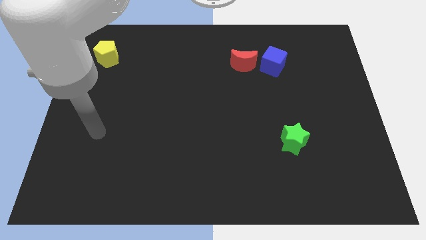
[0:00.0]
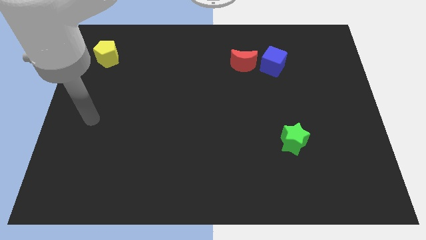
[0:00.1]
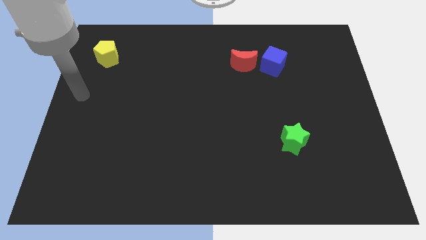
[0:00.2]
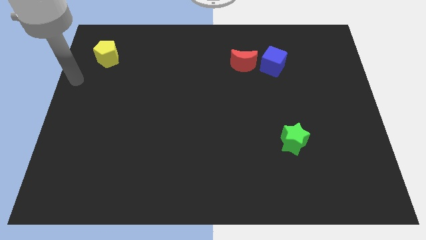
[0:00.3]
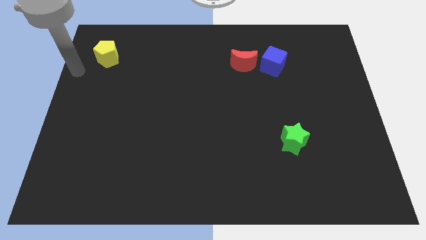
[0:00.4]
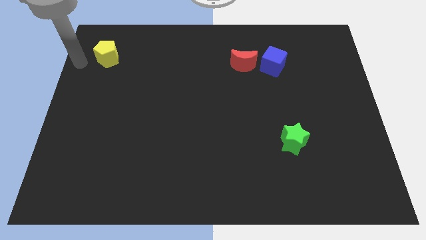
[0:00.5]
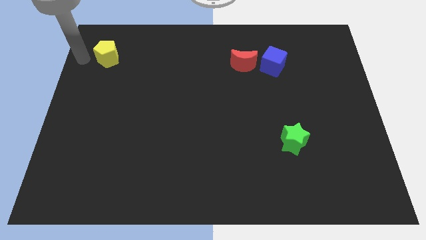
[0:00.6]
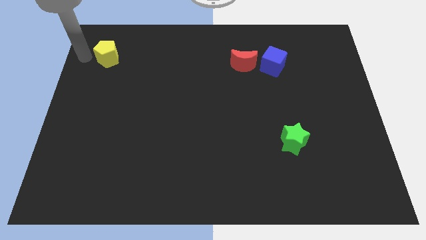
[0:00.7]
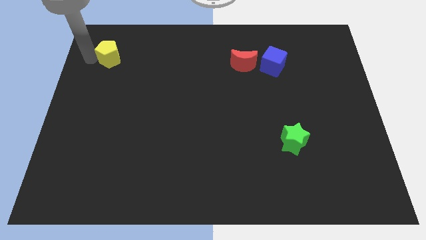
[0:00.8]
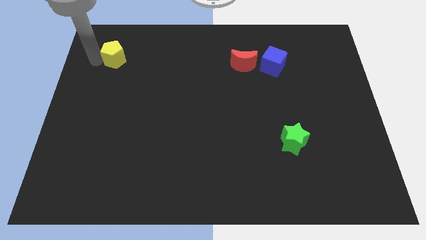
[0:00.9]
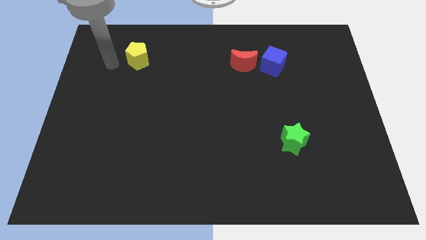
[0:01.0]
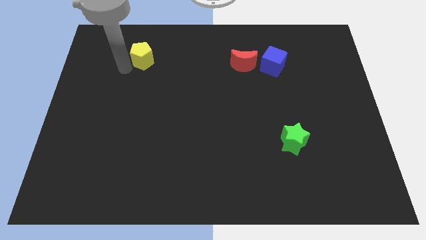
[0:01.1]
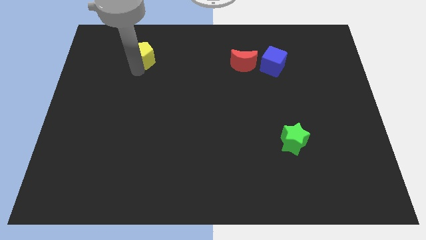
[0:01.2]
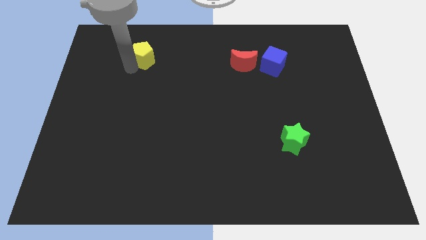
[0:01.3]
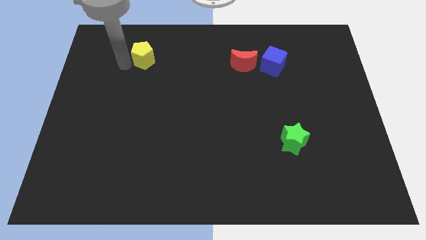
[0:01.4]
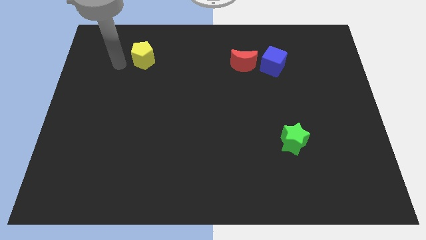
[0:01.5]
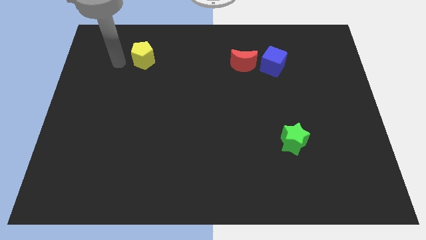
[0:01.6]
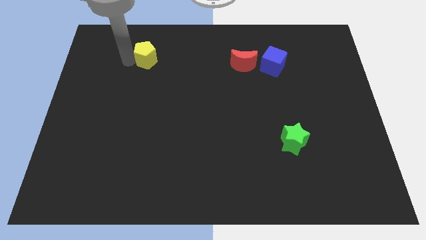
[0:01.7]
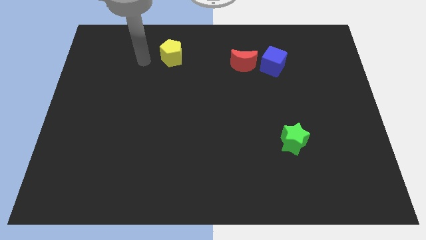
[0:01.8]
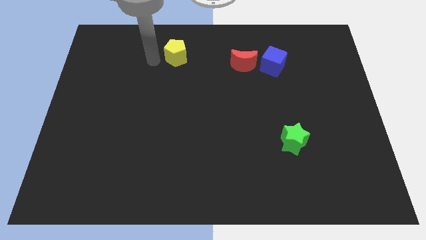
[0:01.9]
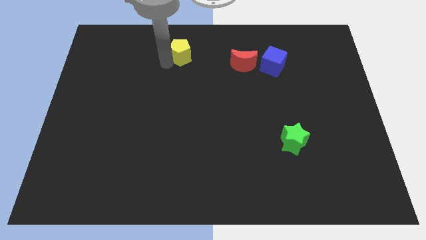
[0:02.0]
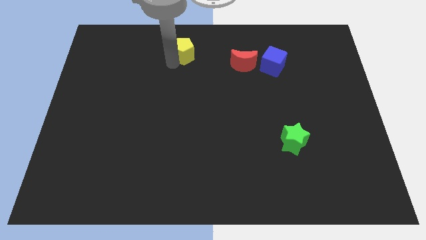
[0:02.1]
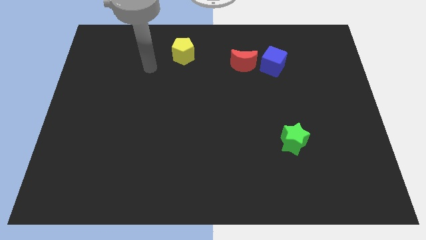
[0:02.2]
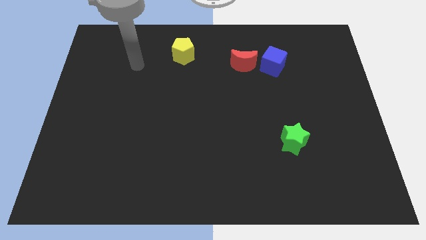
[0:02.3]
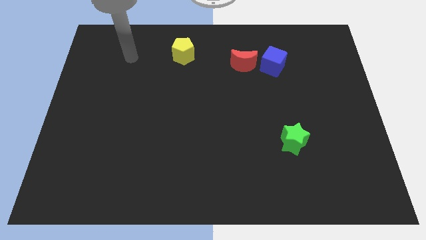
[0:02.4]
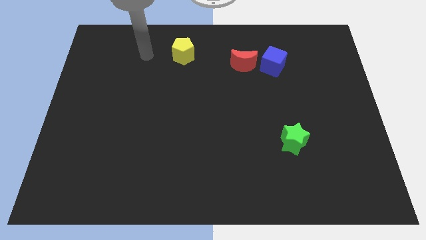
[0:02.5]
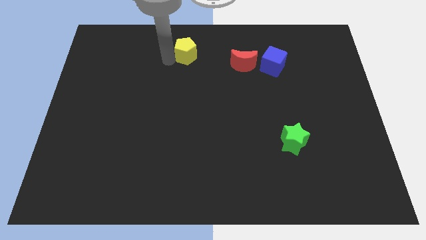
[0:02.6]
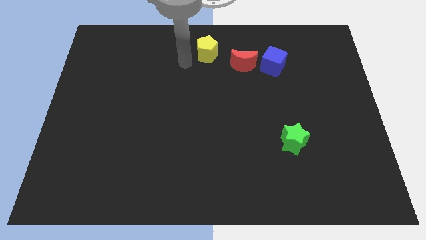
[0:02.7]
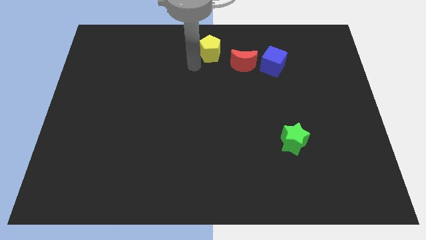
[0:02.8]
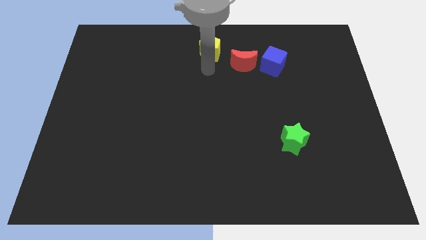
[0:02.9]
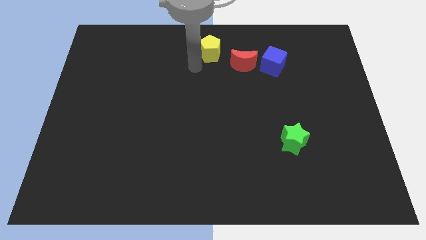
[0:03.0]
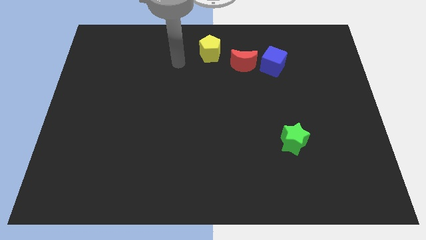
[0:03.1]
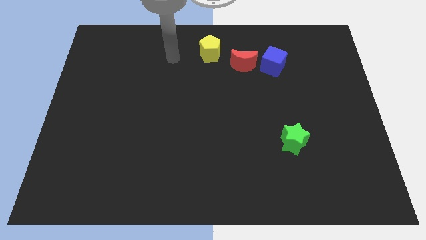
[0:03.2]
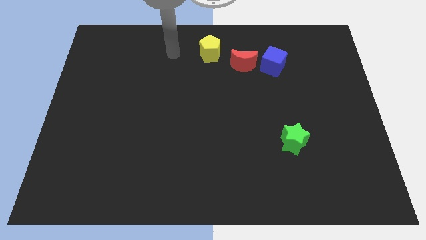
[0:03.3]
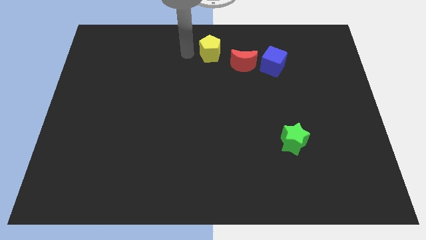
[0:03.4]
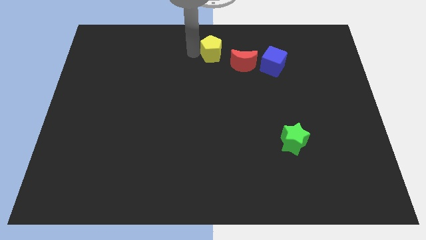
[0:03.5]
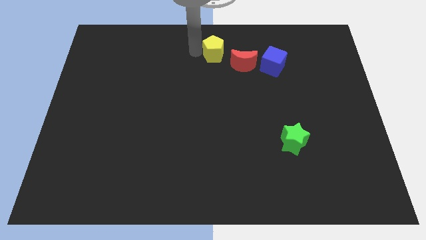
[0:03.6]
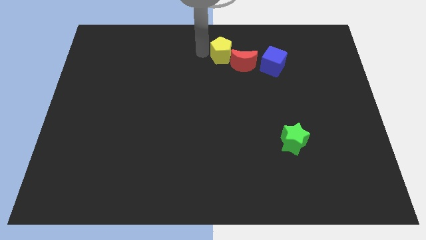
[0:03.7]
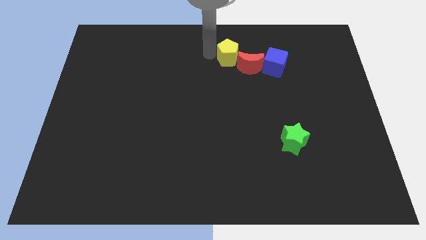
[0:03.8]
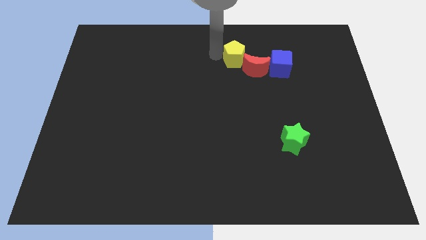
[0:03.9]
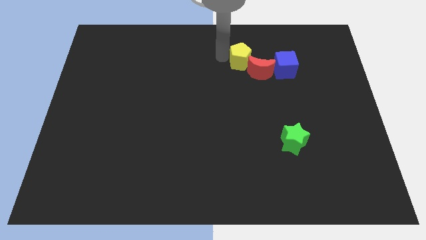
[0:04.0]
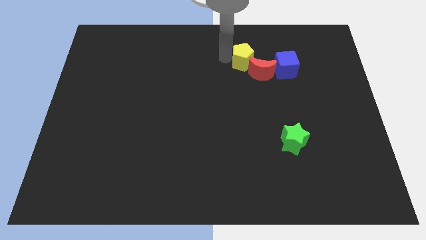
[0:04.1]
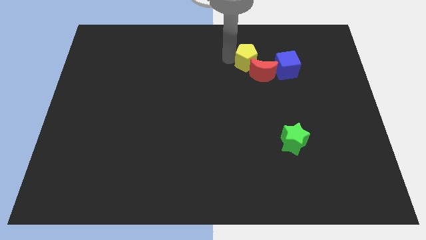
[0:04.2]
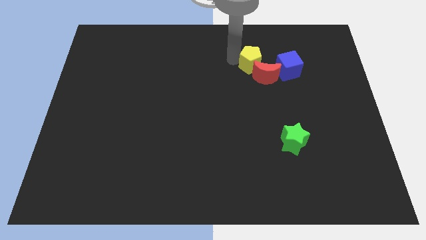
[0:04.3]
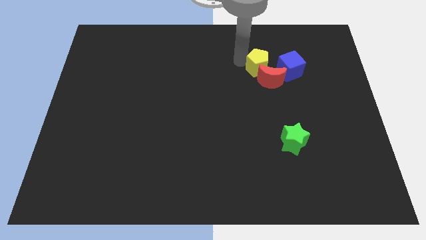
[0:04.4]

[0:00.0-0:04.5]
put the pentagon close to the red moon

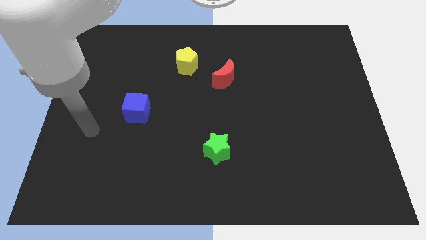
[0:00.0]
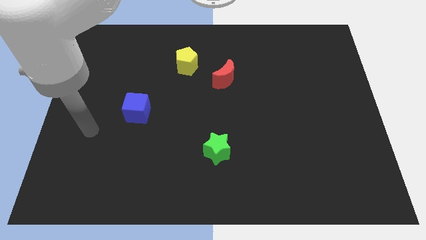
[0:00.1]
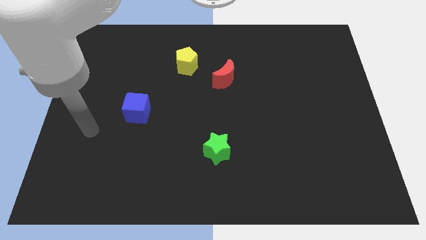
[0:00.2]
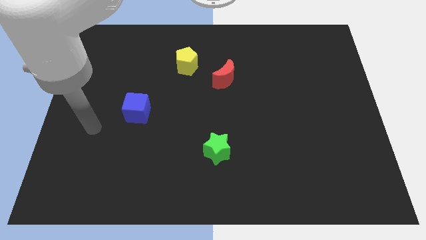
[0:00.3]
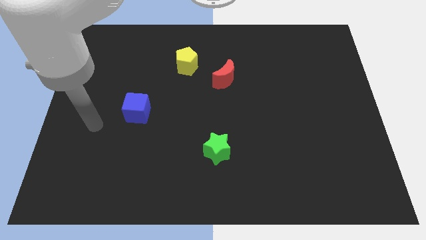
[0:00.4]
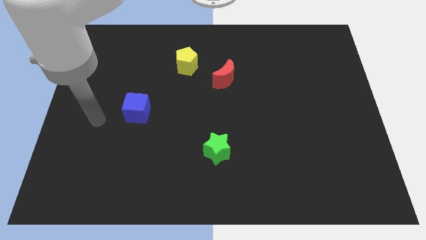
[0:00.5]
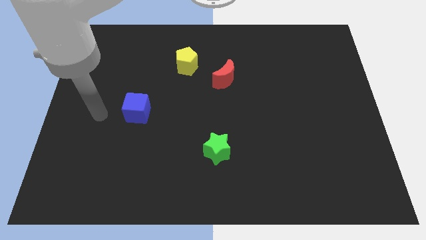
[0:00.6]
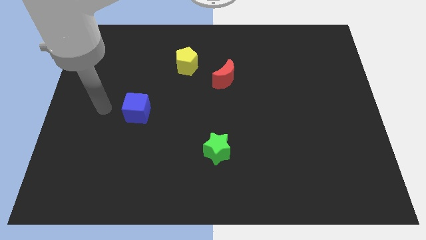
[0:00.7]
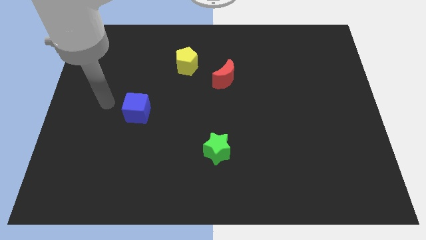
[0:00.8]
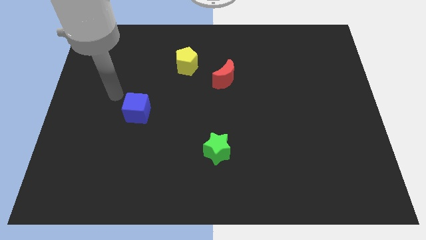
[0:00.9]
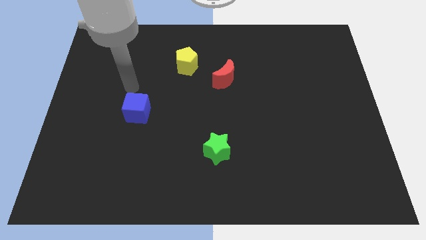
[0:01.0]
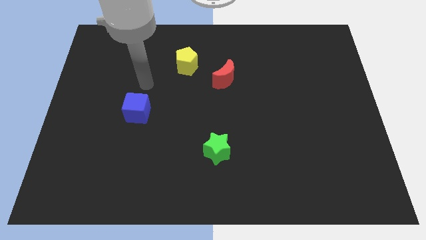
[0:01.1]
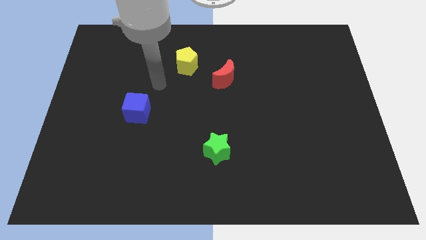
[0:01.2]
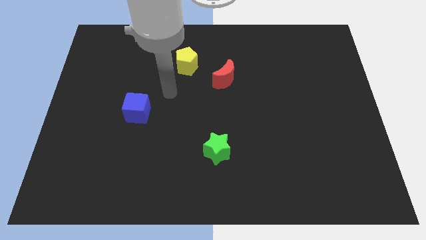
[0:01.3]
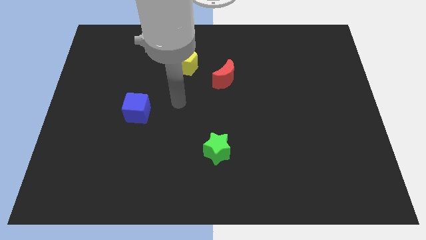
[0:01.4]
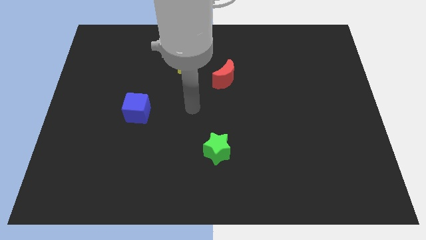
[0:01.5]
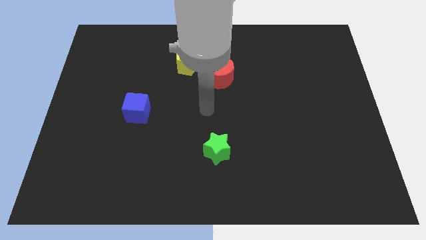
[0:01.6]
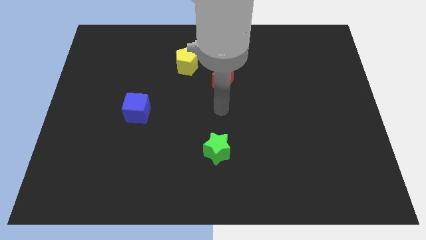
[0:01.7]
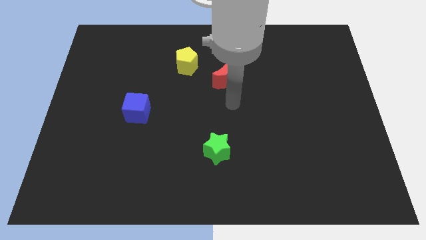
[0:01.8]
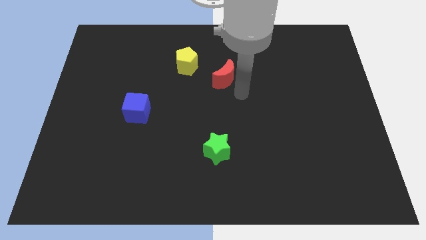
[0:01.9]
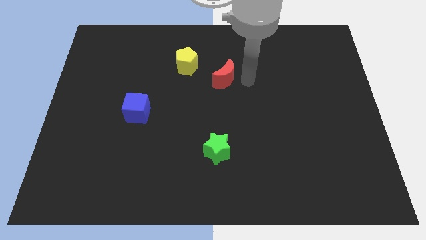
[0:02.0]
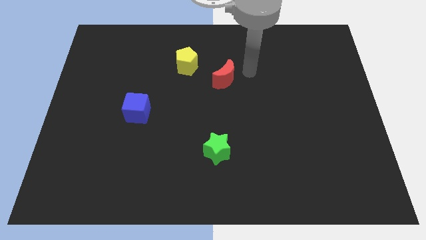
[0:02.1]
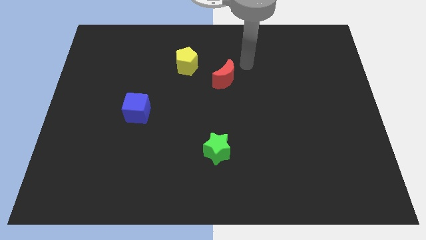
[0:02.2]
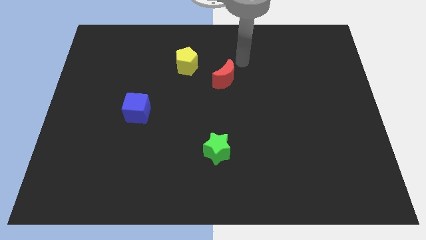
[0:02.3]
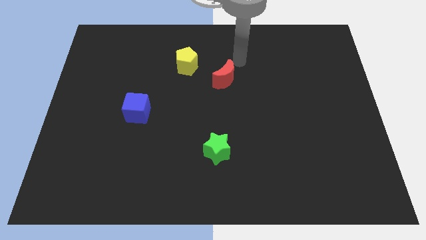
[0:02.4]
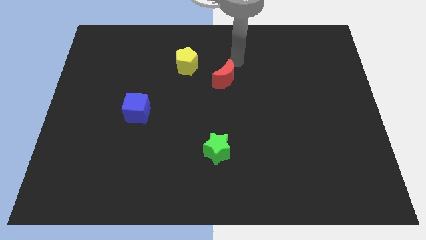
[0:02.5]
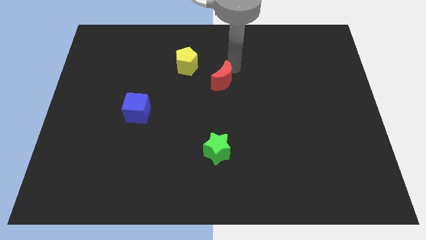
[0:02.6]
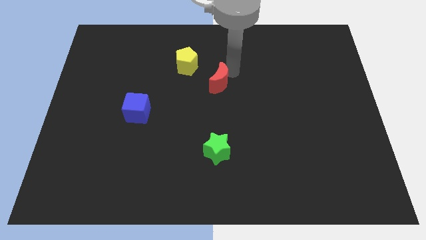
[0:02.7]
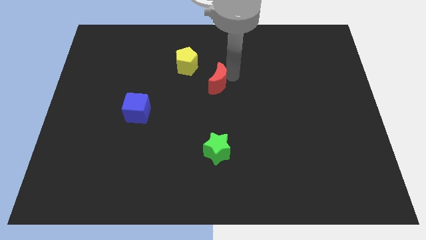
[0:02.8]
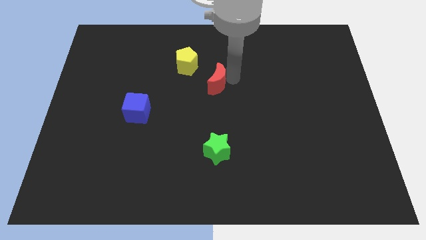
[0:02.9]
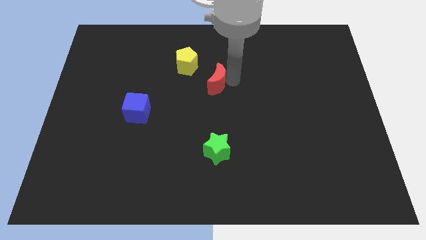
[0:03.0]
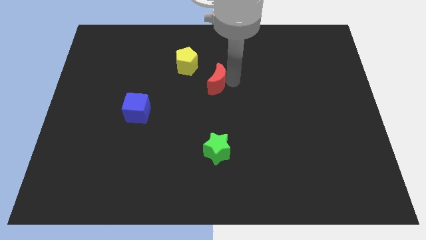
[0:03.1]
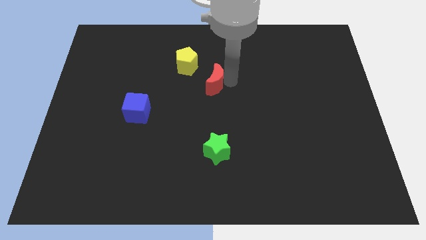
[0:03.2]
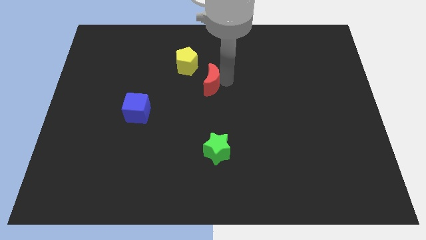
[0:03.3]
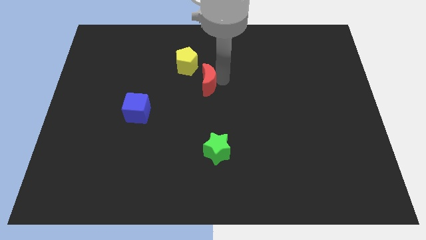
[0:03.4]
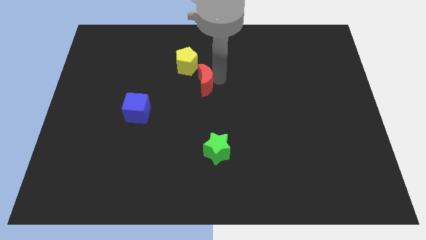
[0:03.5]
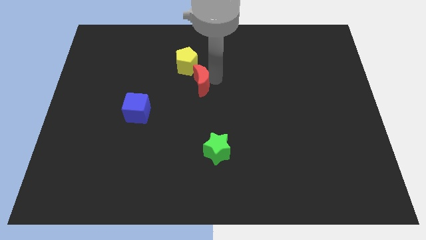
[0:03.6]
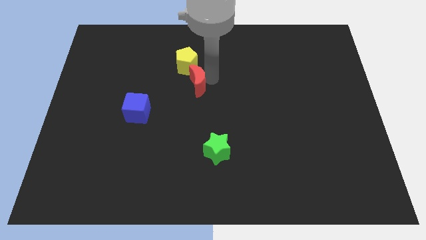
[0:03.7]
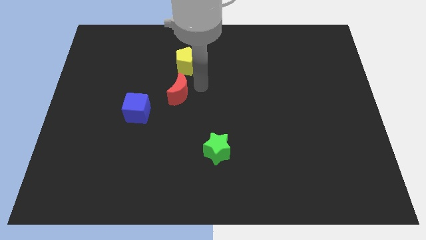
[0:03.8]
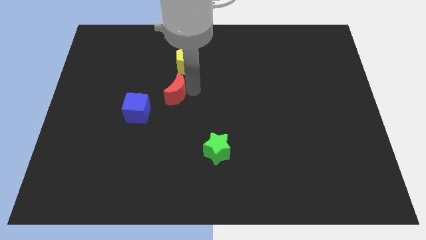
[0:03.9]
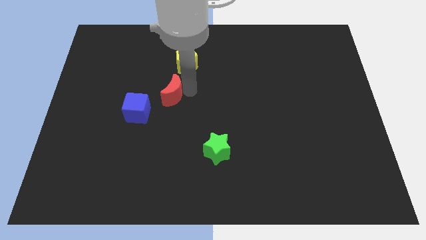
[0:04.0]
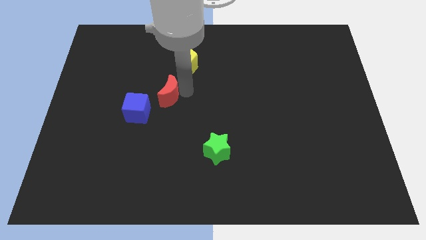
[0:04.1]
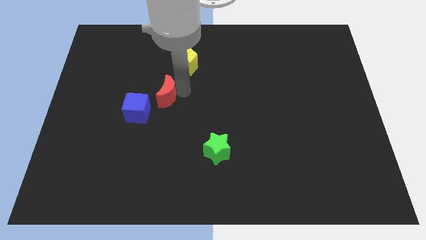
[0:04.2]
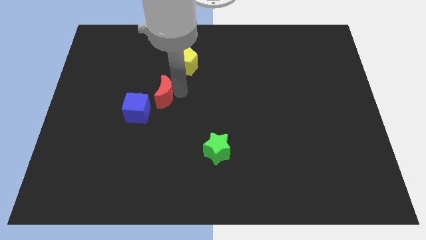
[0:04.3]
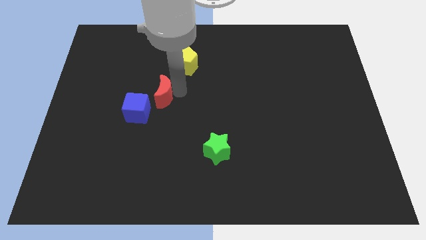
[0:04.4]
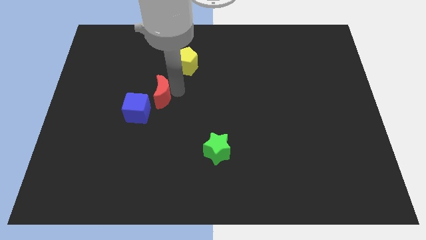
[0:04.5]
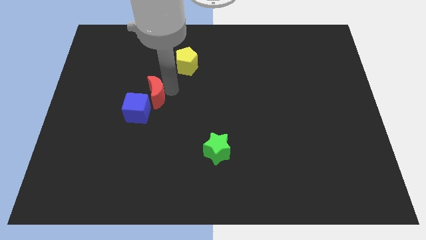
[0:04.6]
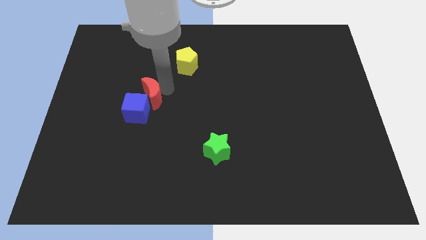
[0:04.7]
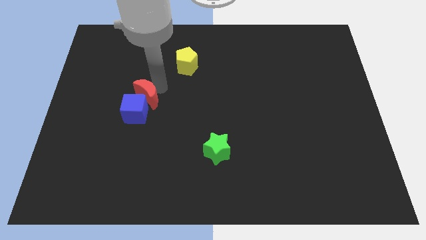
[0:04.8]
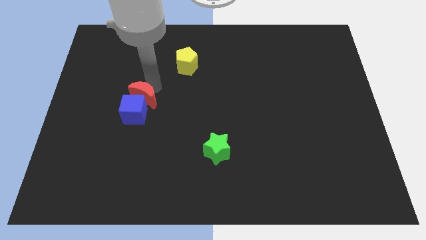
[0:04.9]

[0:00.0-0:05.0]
put the moon towards the cube
